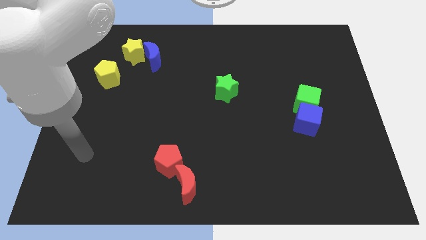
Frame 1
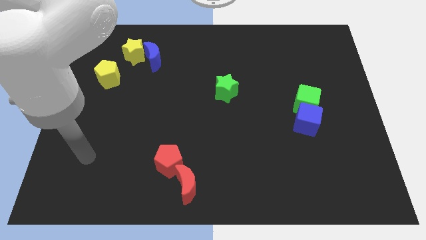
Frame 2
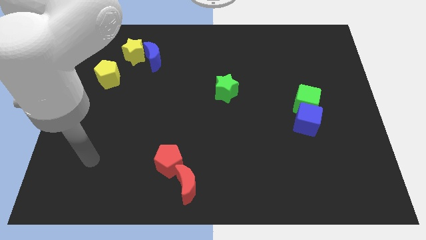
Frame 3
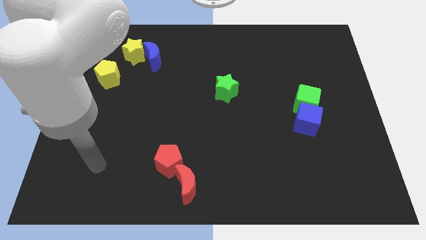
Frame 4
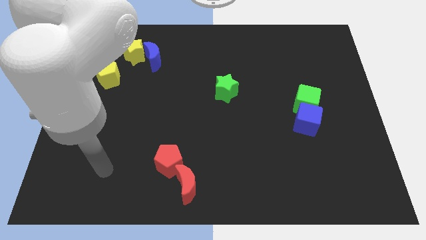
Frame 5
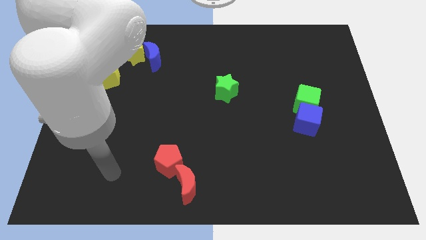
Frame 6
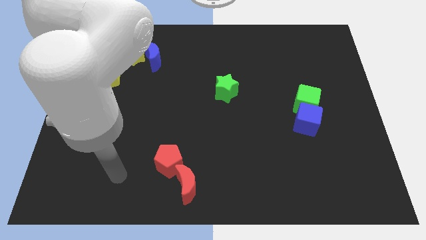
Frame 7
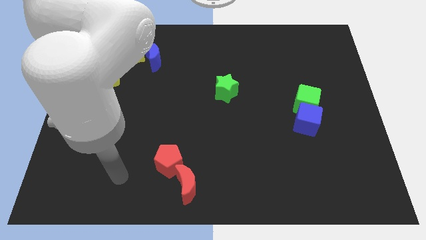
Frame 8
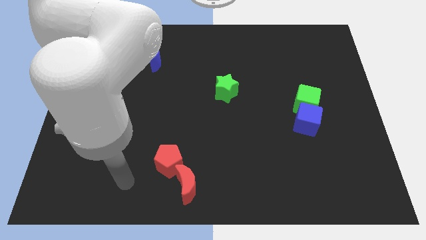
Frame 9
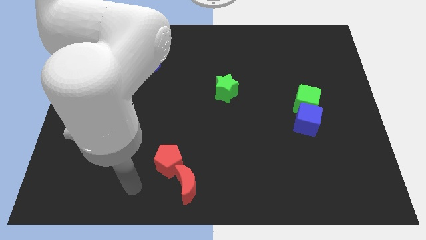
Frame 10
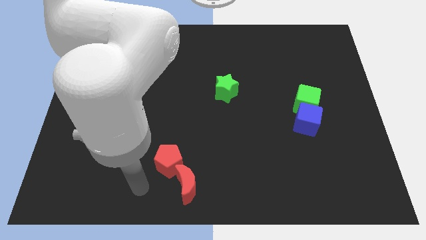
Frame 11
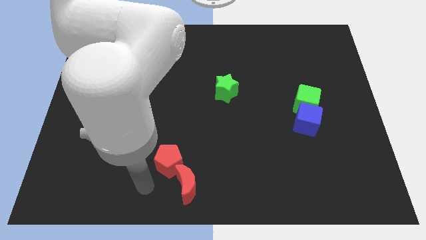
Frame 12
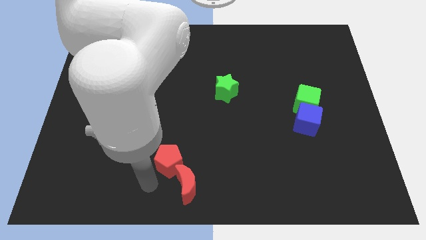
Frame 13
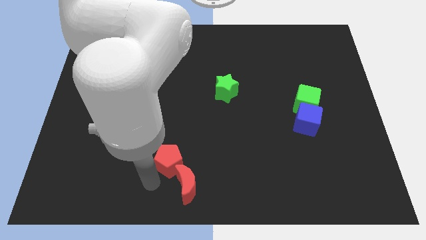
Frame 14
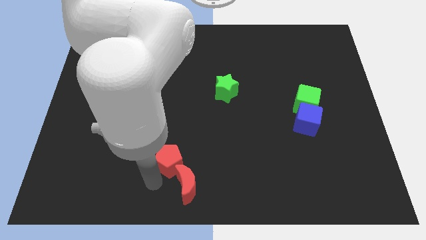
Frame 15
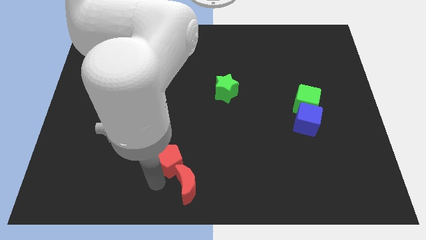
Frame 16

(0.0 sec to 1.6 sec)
point the arm to the left of the red moon

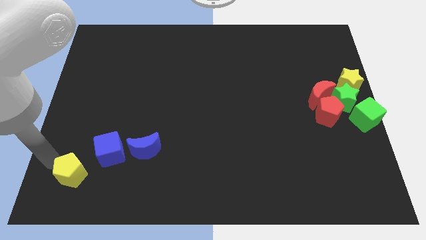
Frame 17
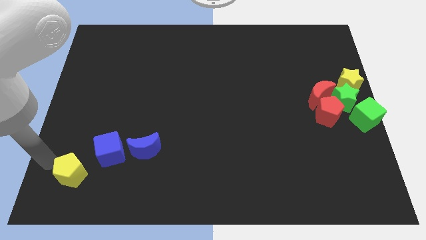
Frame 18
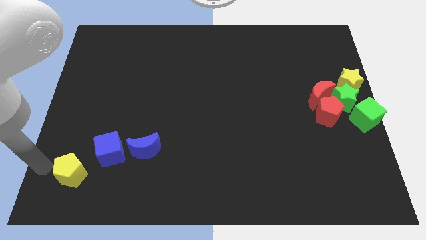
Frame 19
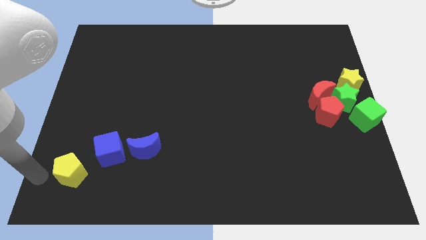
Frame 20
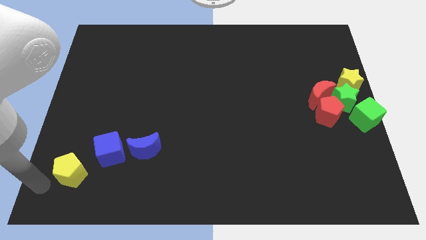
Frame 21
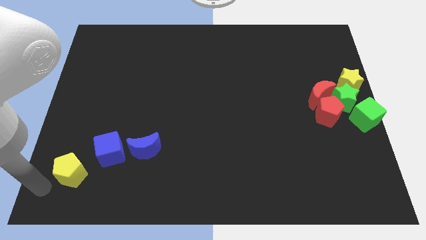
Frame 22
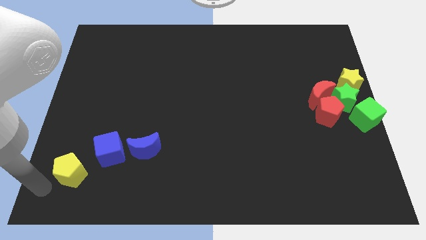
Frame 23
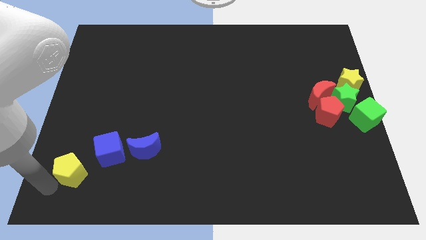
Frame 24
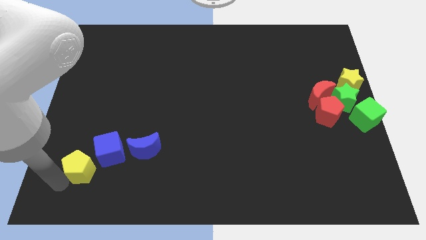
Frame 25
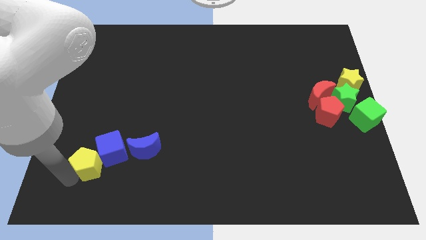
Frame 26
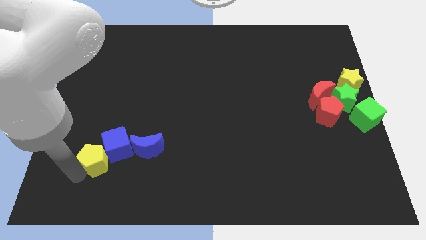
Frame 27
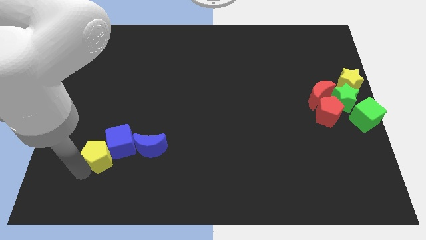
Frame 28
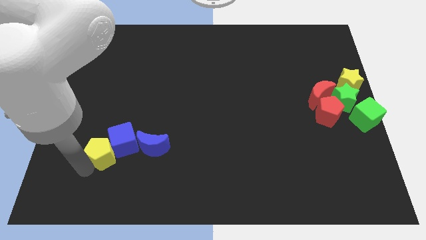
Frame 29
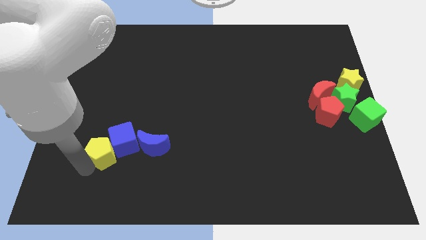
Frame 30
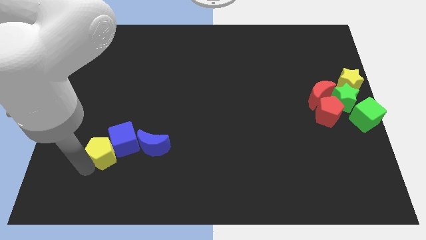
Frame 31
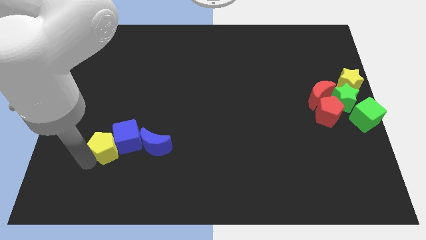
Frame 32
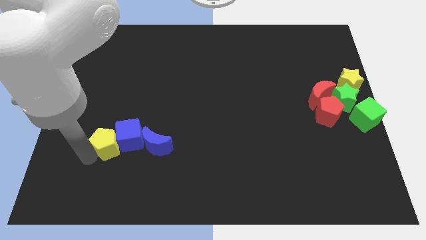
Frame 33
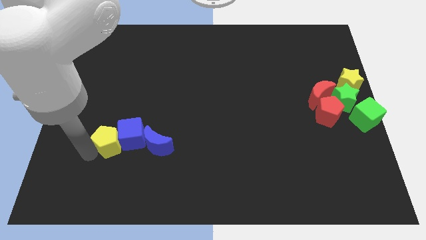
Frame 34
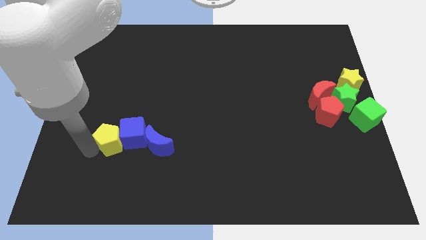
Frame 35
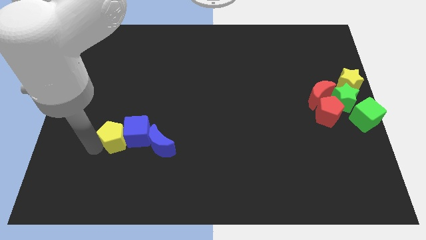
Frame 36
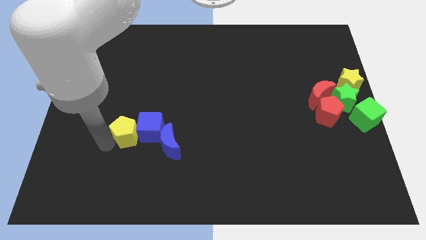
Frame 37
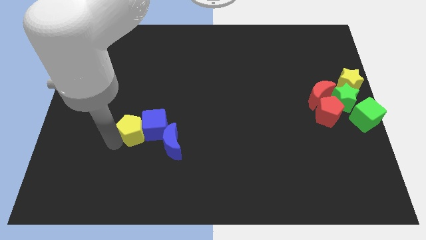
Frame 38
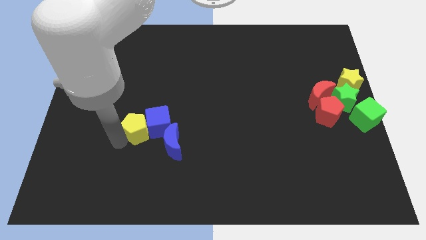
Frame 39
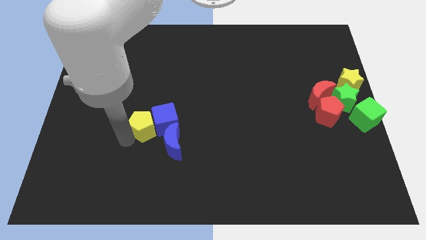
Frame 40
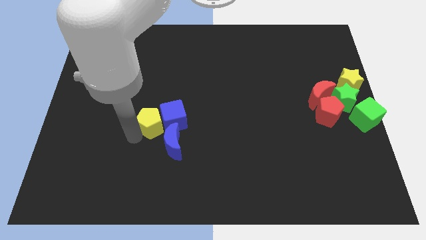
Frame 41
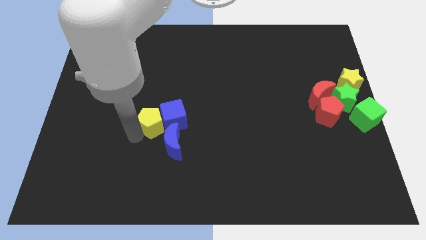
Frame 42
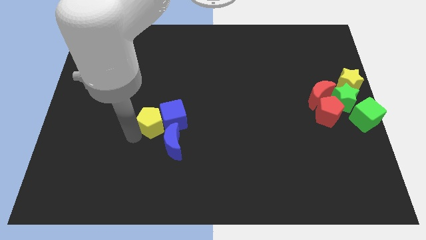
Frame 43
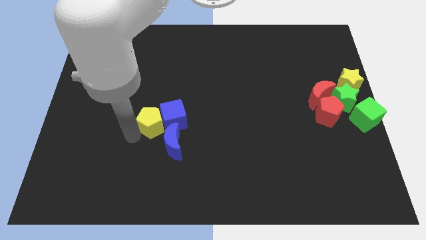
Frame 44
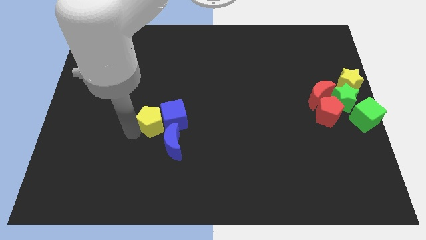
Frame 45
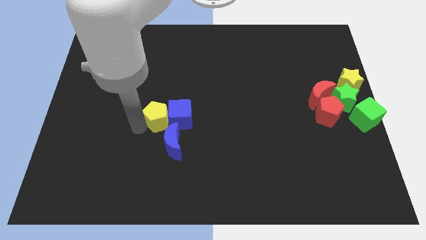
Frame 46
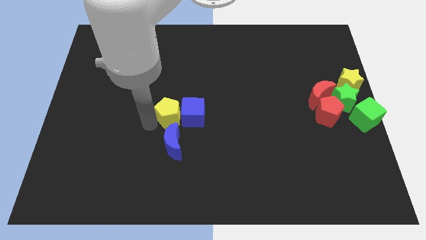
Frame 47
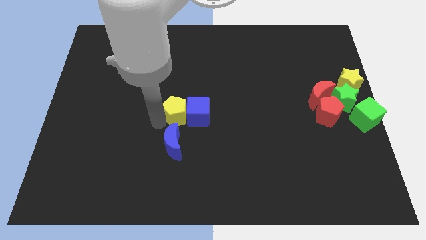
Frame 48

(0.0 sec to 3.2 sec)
place the yellow pentagon above the blue moon

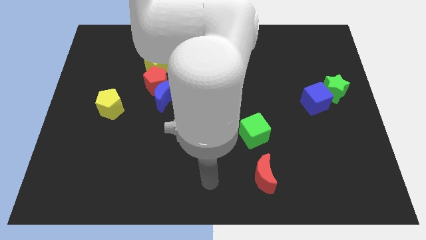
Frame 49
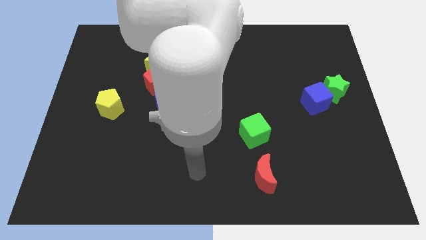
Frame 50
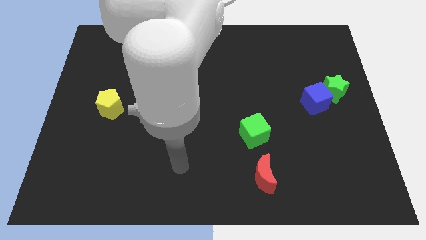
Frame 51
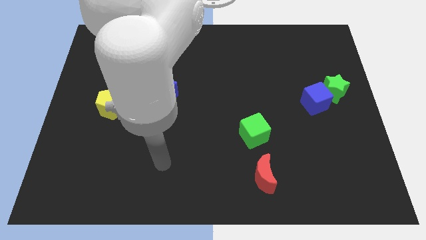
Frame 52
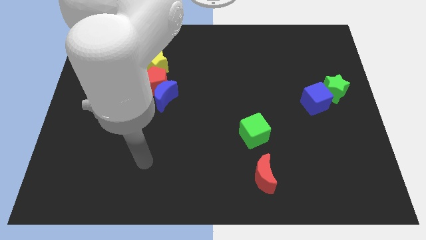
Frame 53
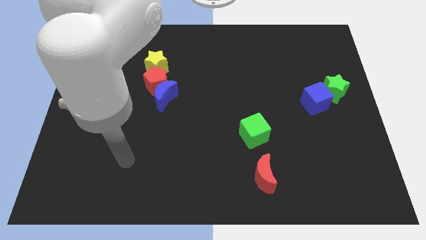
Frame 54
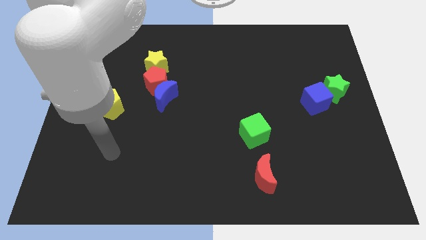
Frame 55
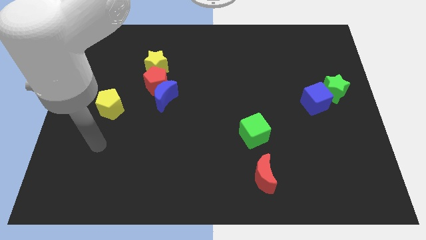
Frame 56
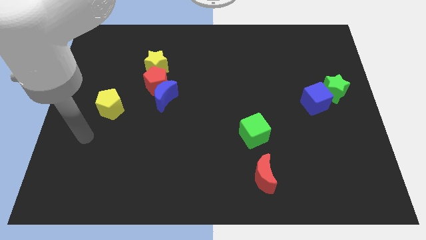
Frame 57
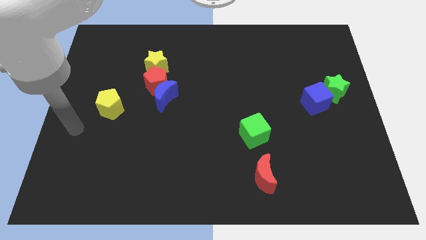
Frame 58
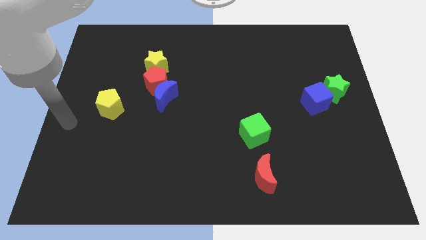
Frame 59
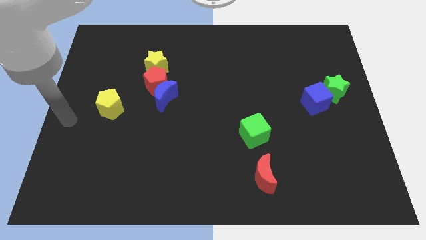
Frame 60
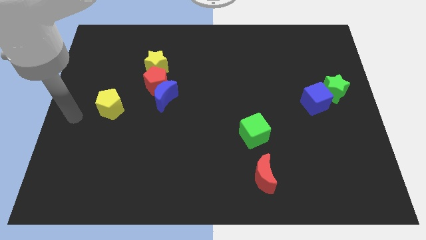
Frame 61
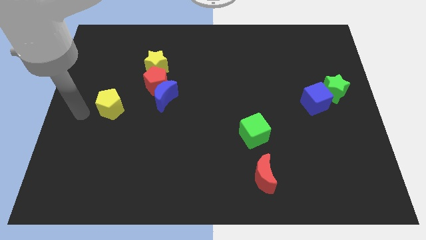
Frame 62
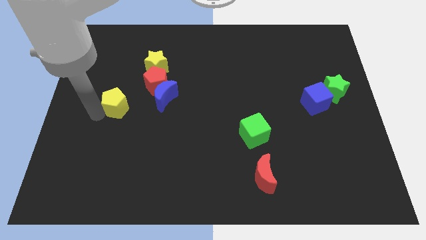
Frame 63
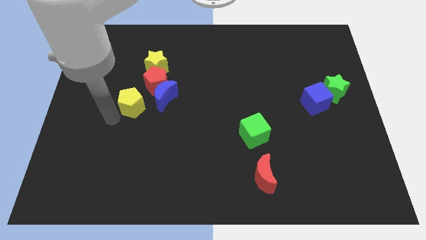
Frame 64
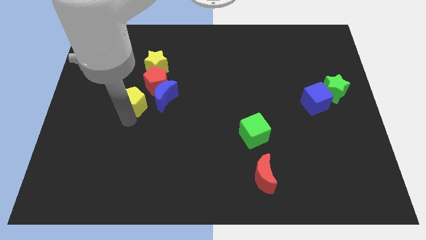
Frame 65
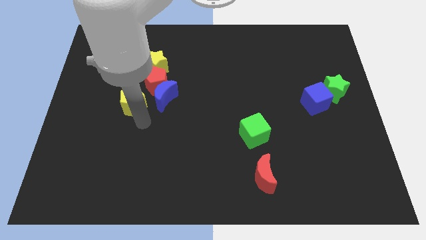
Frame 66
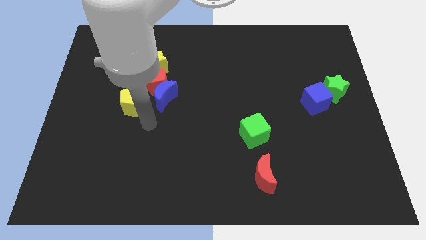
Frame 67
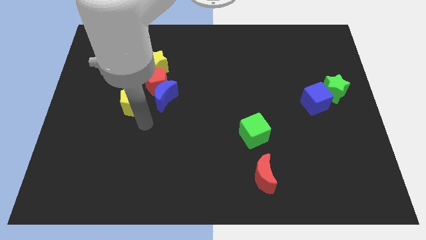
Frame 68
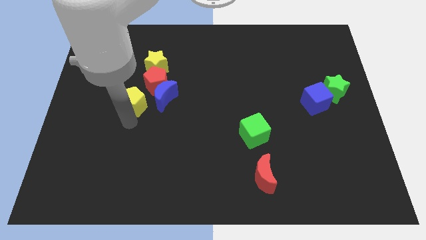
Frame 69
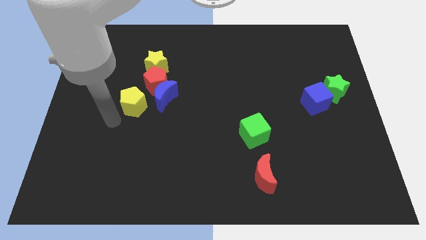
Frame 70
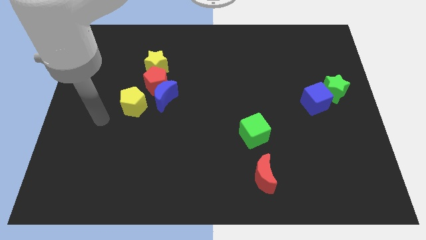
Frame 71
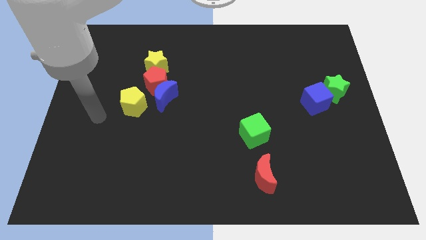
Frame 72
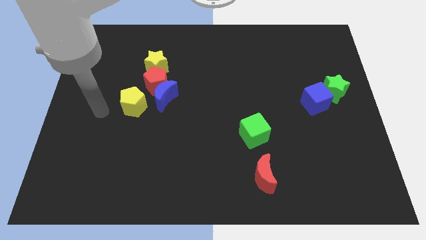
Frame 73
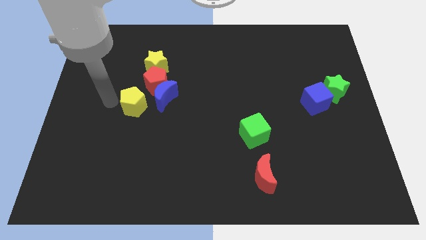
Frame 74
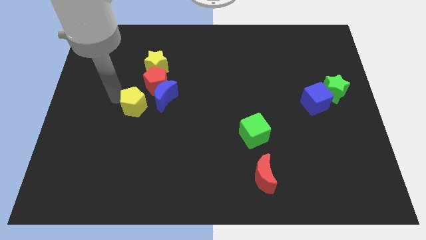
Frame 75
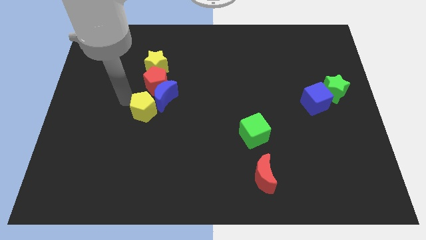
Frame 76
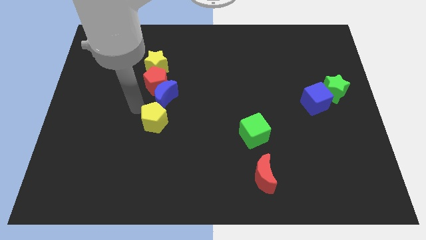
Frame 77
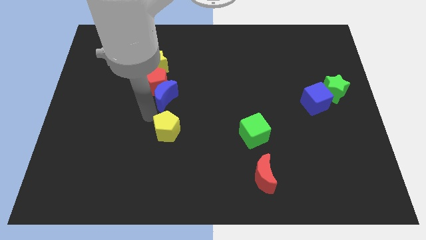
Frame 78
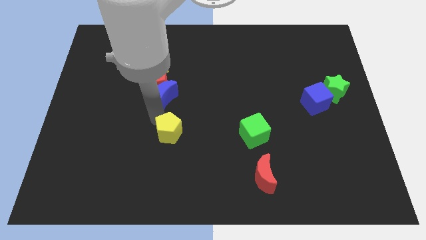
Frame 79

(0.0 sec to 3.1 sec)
push the yellow pentagon to the bottom of the blue crescent

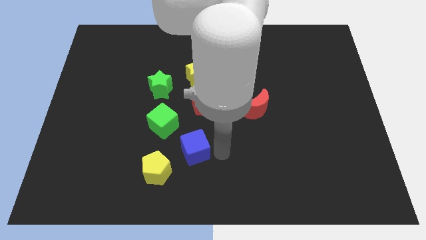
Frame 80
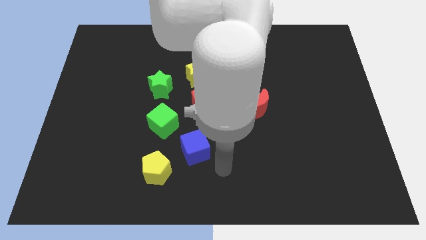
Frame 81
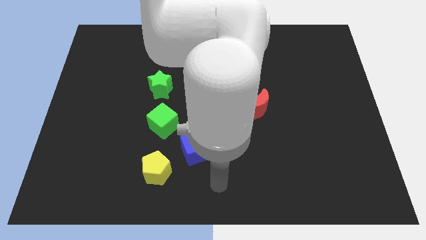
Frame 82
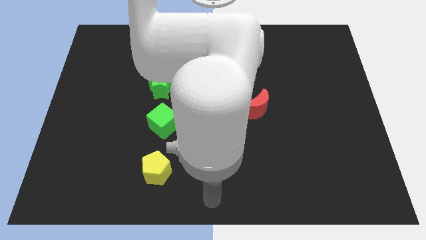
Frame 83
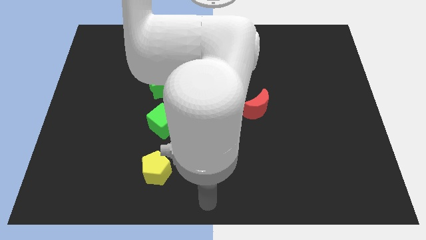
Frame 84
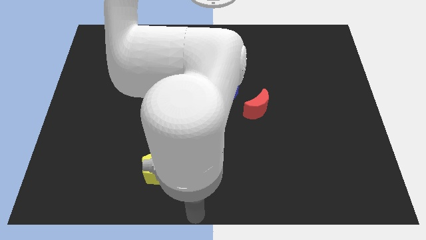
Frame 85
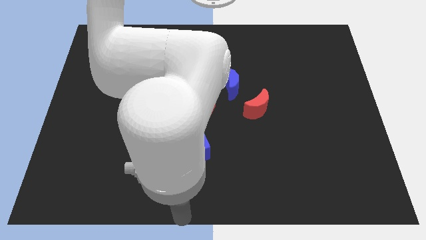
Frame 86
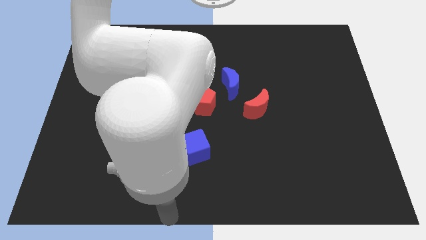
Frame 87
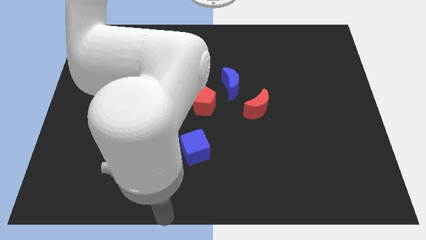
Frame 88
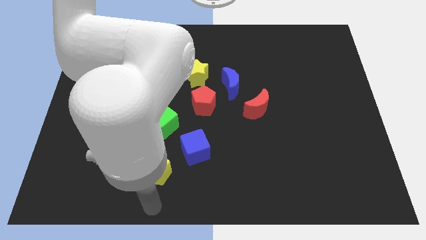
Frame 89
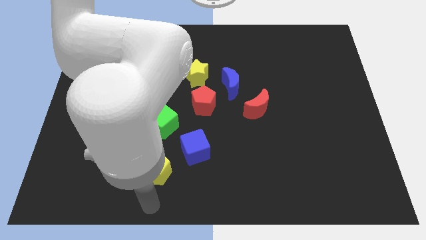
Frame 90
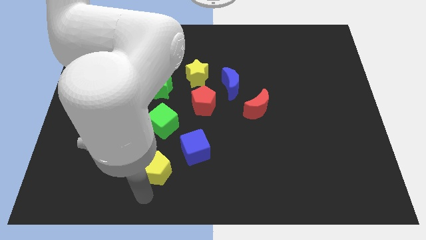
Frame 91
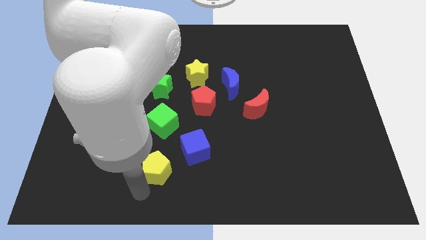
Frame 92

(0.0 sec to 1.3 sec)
move your arm towards the left bottom of the yellow pentagon
